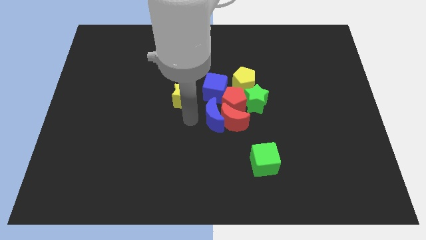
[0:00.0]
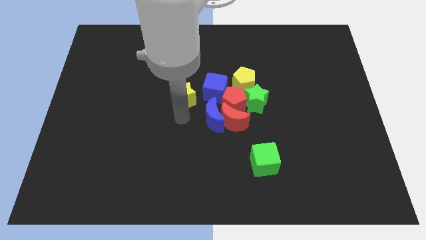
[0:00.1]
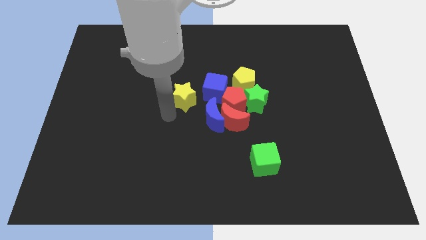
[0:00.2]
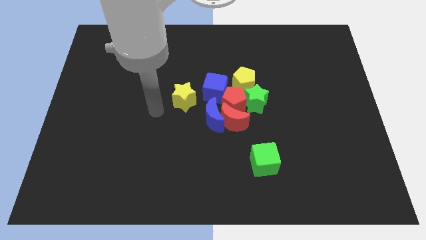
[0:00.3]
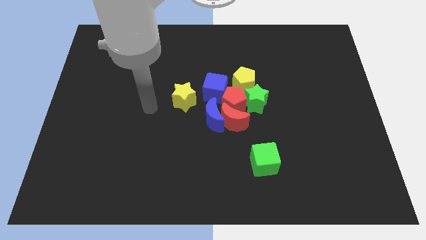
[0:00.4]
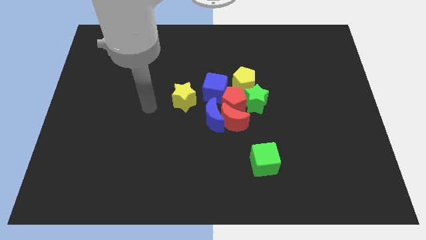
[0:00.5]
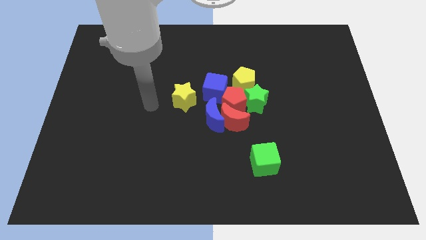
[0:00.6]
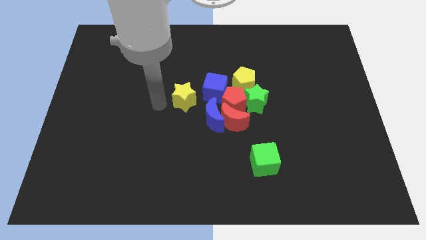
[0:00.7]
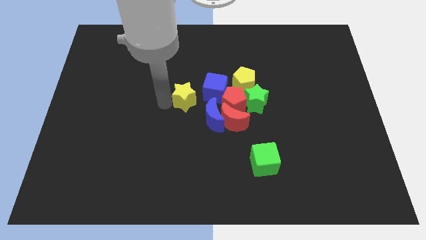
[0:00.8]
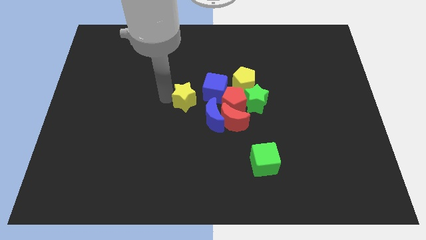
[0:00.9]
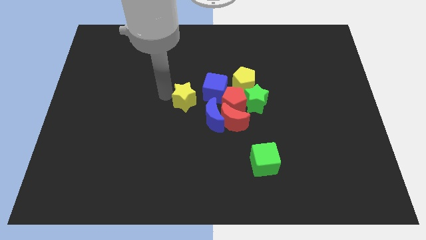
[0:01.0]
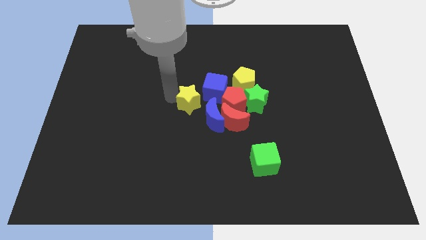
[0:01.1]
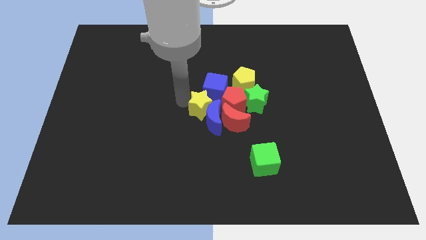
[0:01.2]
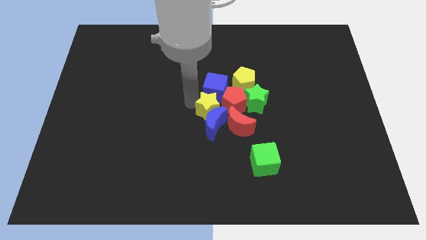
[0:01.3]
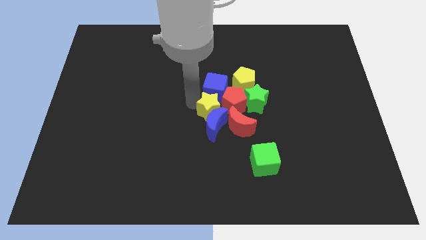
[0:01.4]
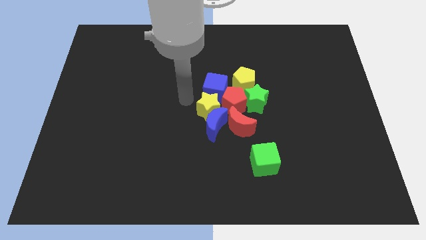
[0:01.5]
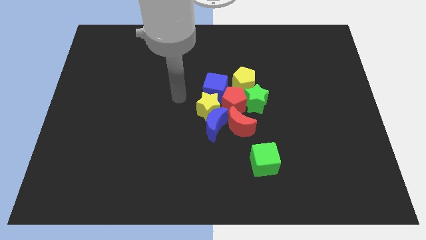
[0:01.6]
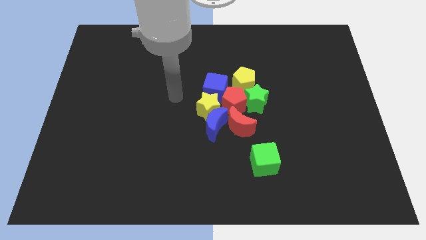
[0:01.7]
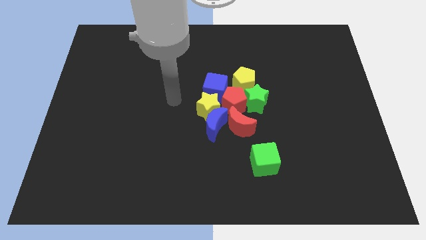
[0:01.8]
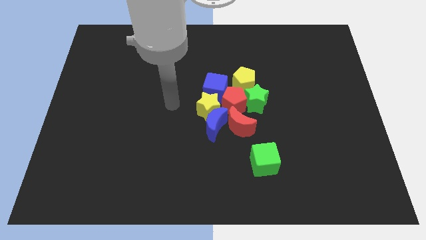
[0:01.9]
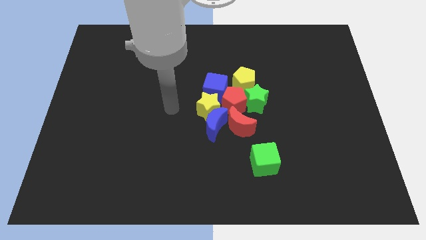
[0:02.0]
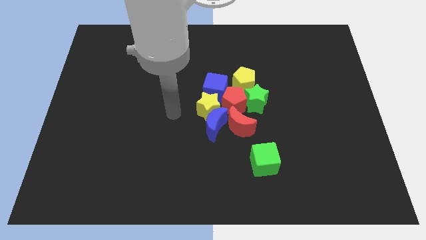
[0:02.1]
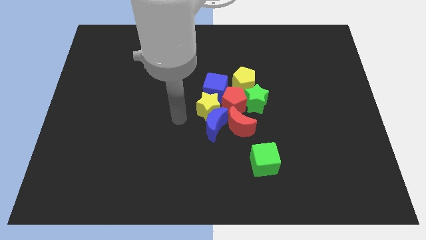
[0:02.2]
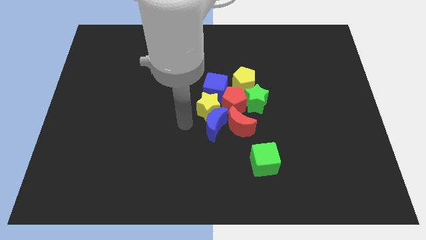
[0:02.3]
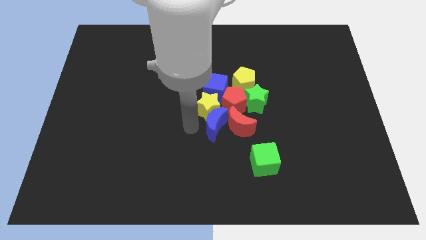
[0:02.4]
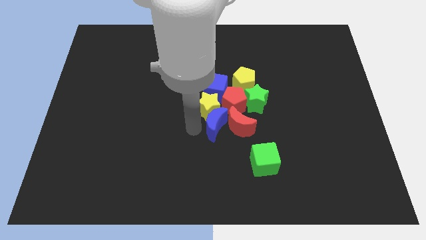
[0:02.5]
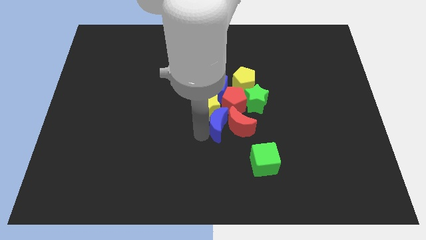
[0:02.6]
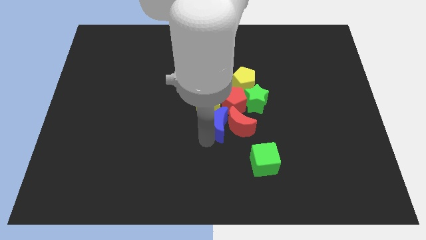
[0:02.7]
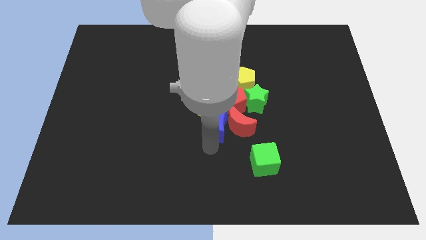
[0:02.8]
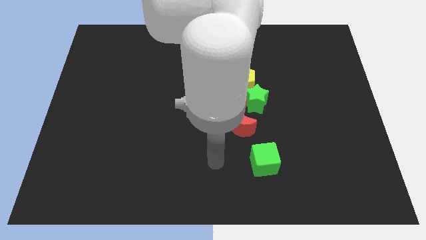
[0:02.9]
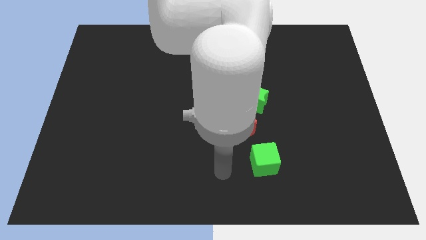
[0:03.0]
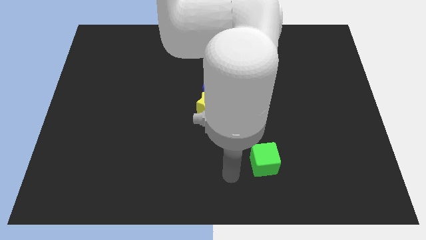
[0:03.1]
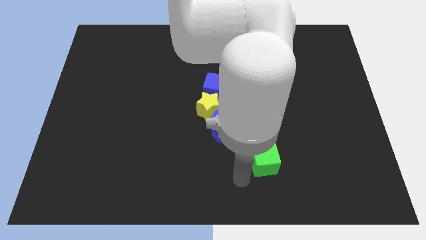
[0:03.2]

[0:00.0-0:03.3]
place the yellow star between the blue cube and blue moon

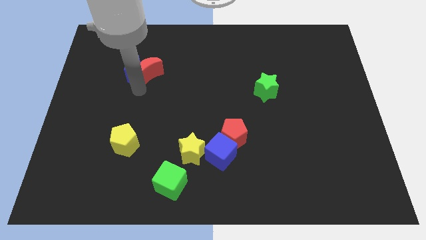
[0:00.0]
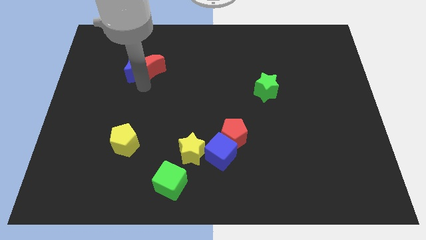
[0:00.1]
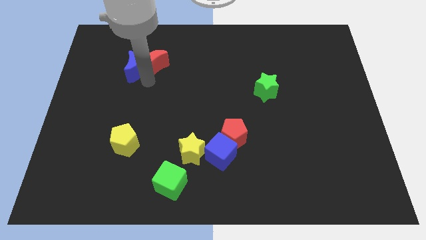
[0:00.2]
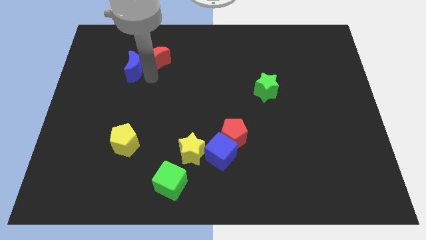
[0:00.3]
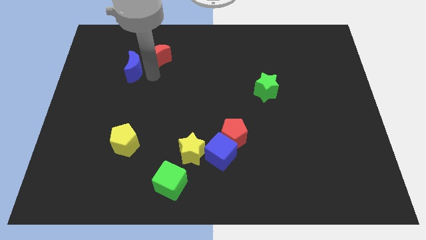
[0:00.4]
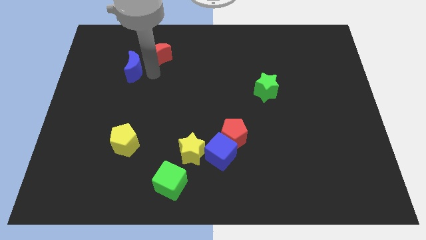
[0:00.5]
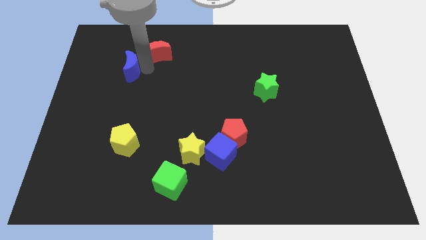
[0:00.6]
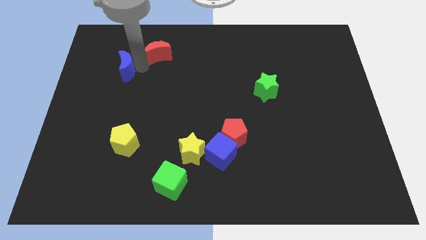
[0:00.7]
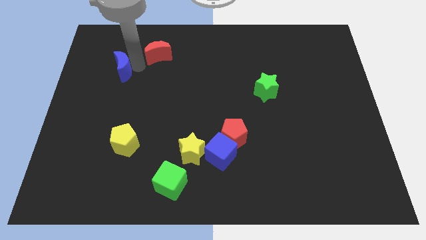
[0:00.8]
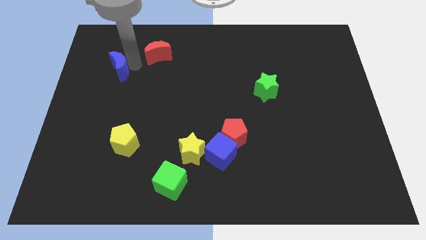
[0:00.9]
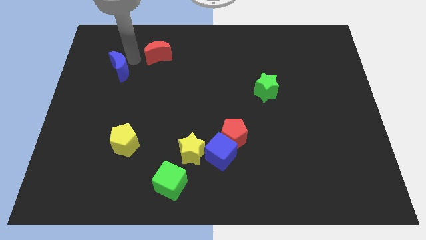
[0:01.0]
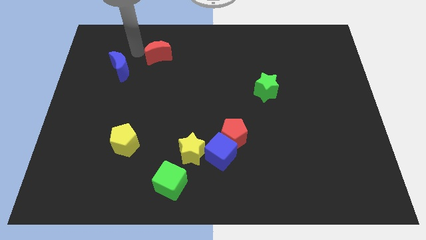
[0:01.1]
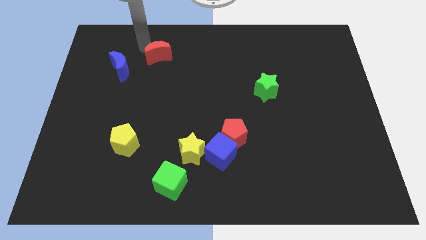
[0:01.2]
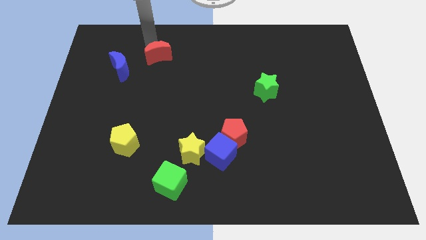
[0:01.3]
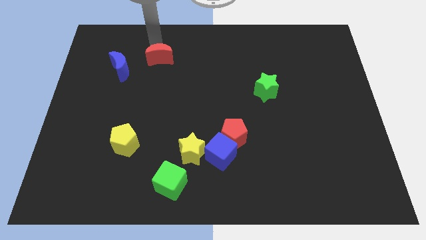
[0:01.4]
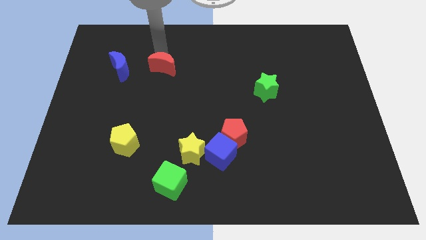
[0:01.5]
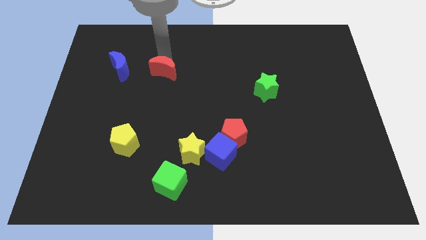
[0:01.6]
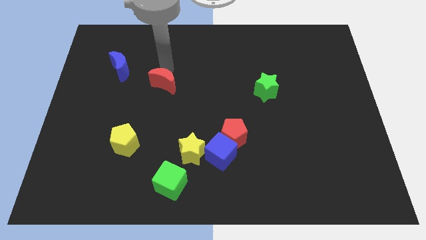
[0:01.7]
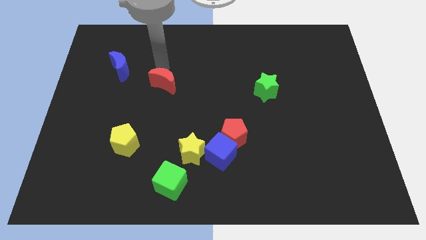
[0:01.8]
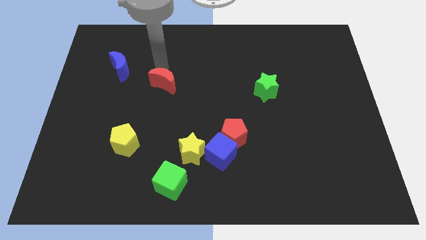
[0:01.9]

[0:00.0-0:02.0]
separate the red moon and the blue moon

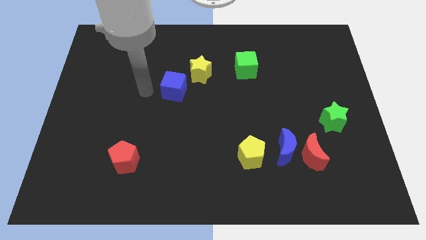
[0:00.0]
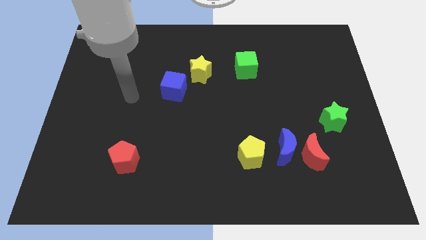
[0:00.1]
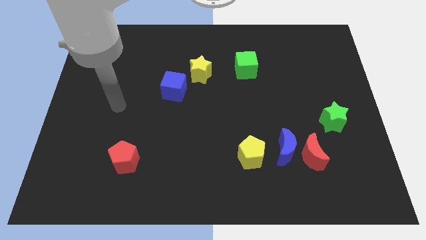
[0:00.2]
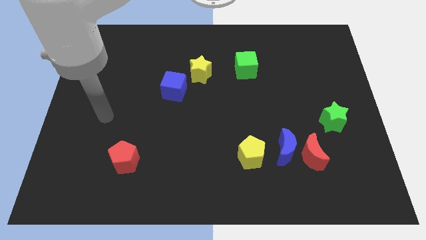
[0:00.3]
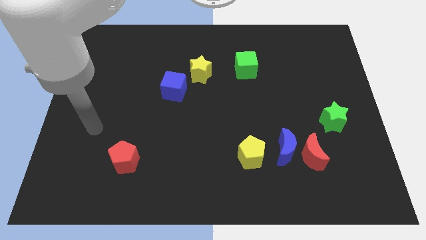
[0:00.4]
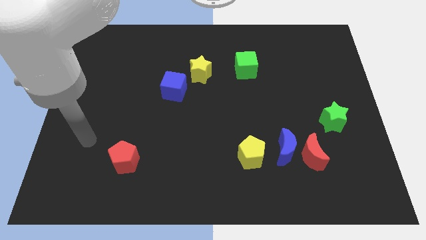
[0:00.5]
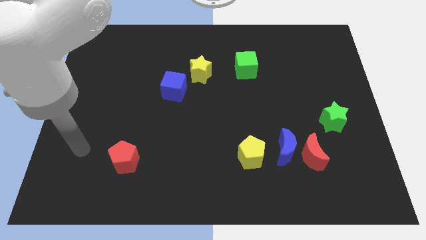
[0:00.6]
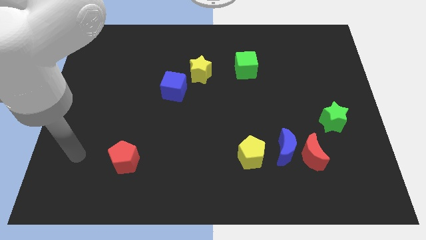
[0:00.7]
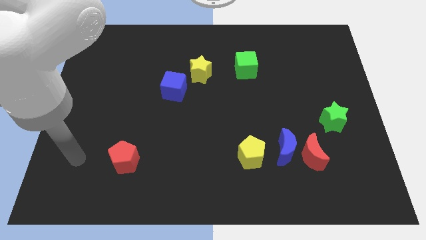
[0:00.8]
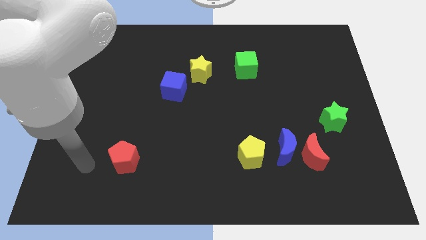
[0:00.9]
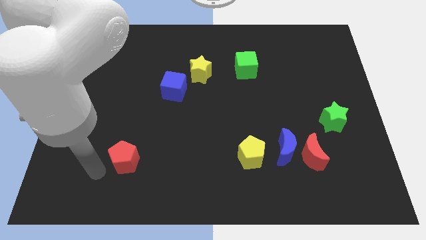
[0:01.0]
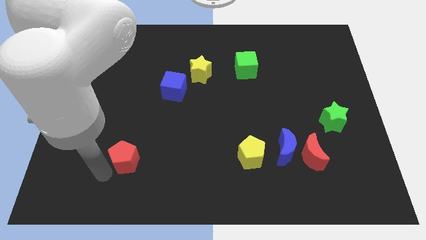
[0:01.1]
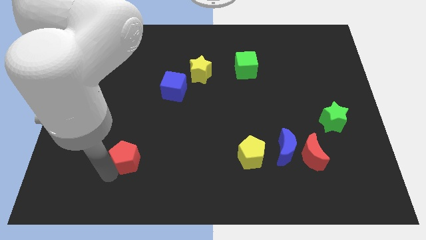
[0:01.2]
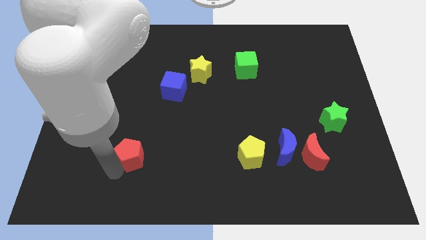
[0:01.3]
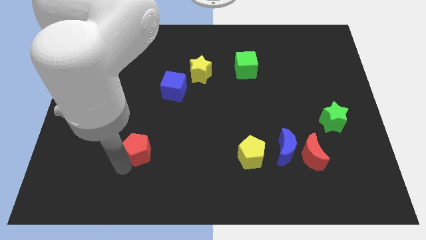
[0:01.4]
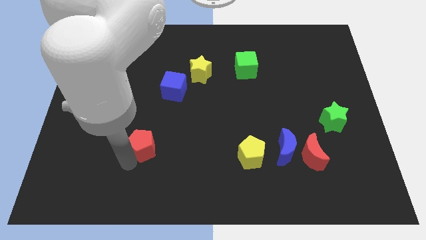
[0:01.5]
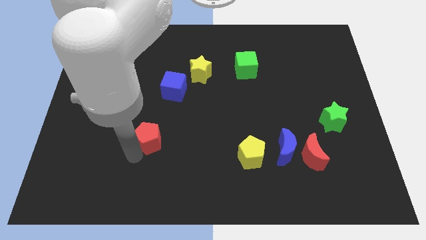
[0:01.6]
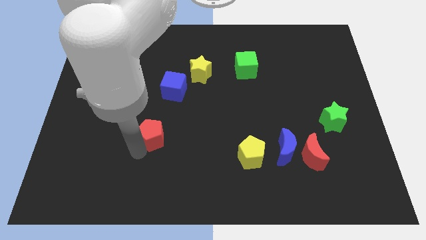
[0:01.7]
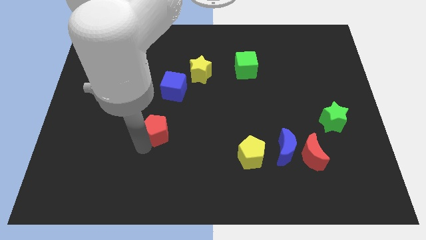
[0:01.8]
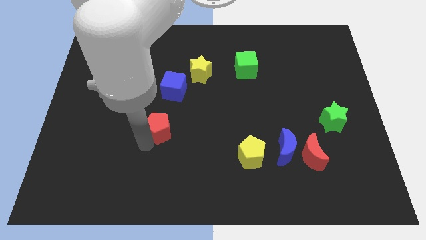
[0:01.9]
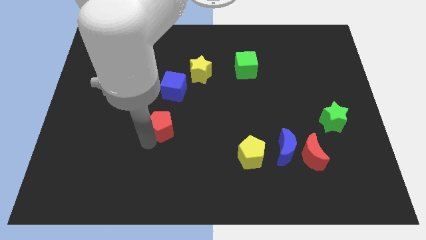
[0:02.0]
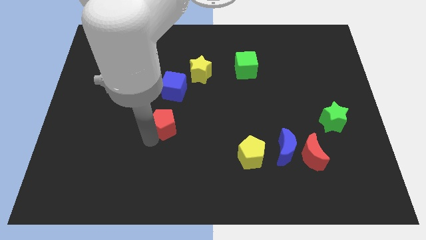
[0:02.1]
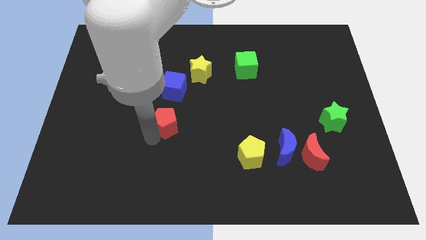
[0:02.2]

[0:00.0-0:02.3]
move the red pentagon towards blue cube

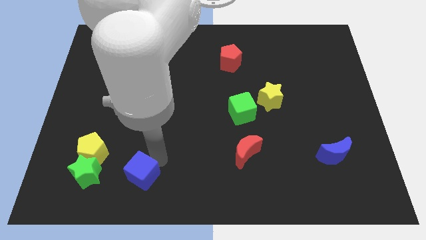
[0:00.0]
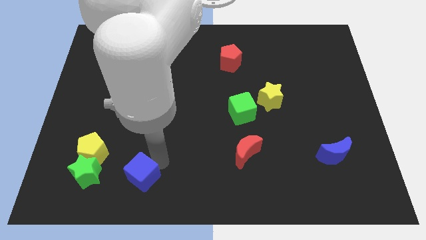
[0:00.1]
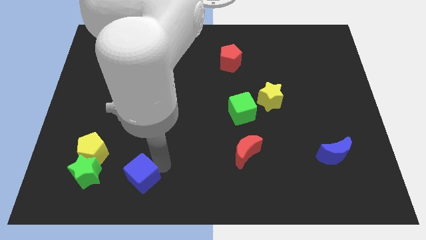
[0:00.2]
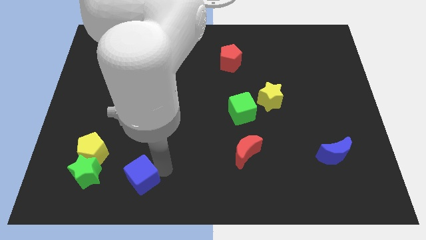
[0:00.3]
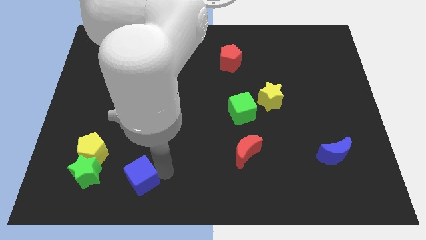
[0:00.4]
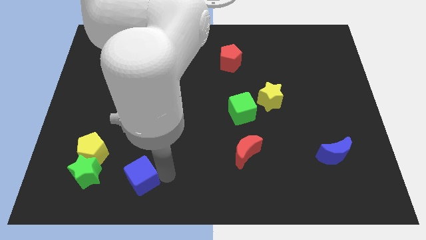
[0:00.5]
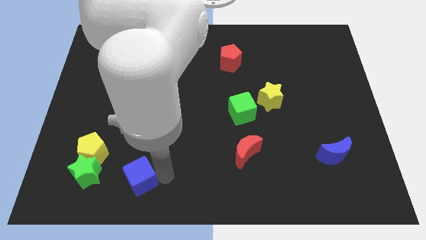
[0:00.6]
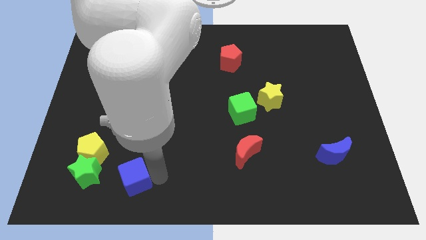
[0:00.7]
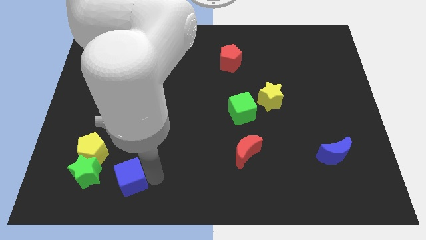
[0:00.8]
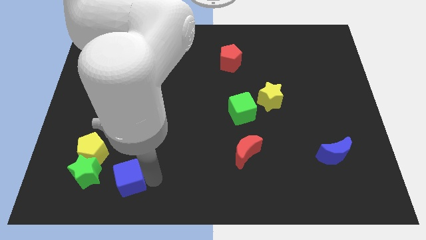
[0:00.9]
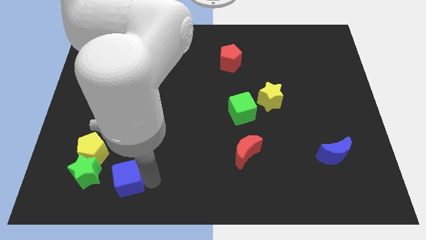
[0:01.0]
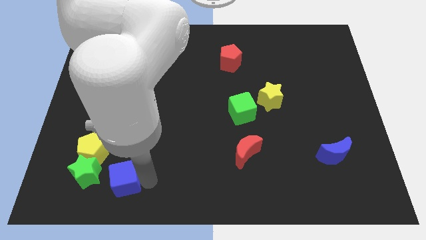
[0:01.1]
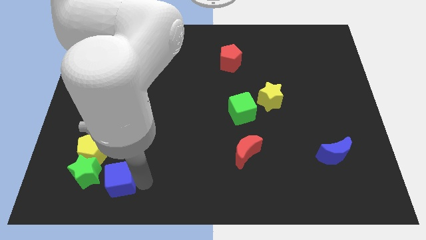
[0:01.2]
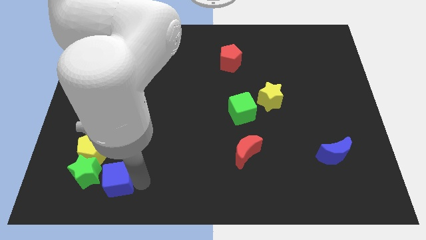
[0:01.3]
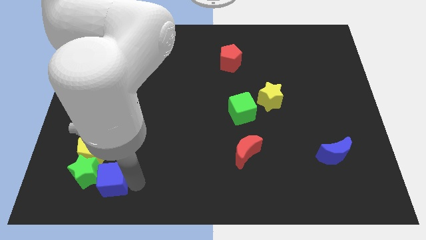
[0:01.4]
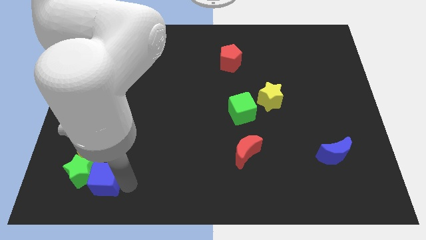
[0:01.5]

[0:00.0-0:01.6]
push the blue cube into the green star
